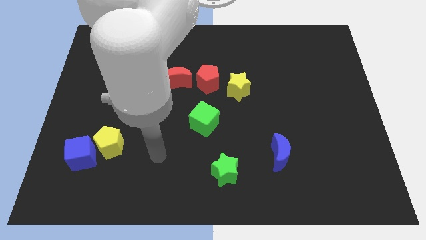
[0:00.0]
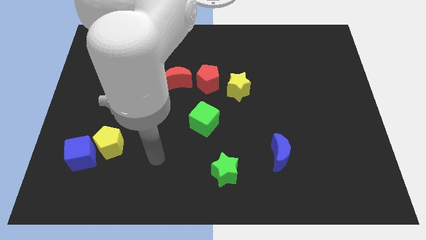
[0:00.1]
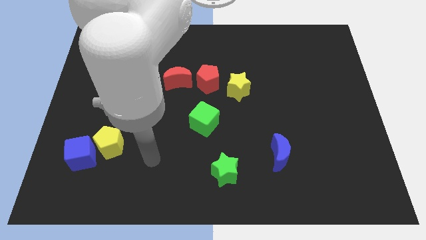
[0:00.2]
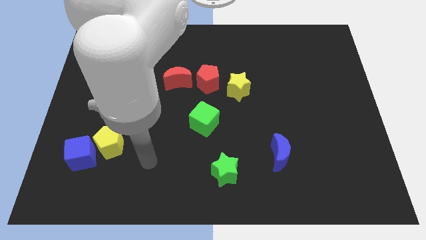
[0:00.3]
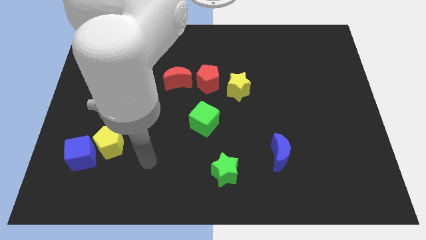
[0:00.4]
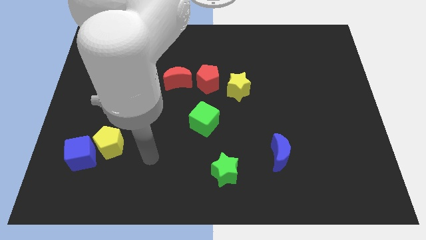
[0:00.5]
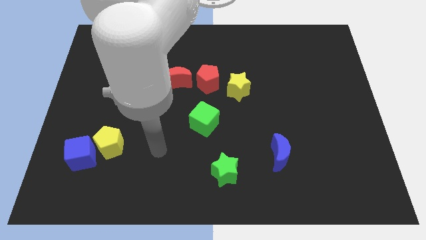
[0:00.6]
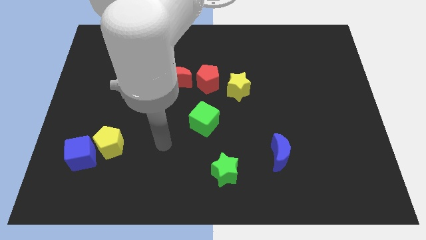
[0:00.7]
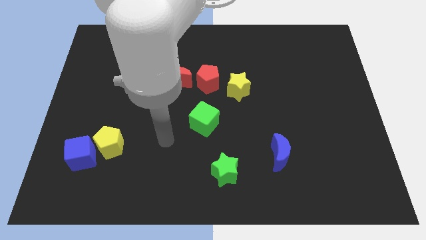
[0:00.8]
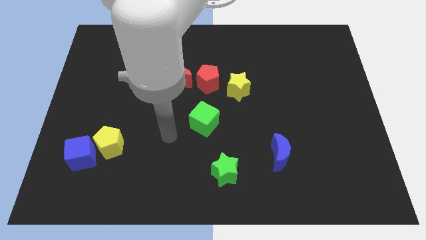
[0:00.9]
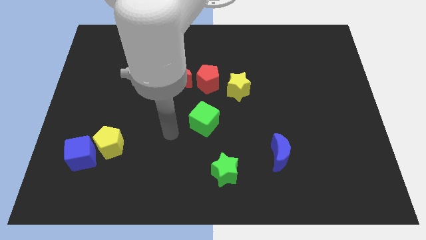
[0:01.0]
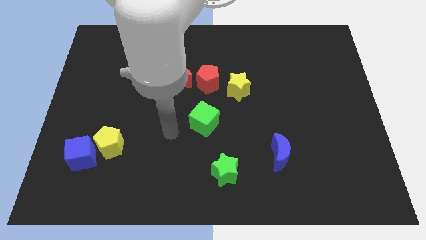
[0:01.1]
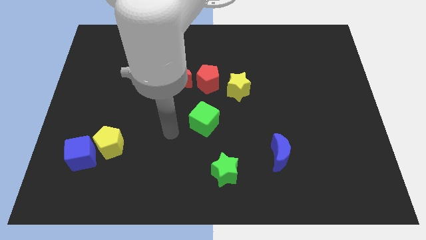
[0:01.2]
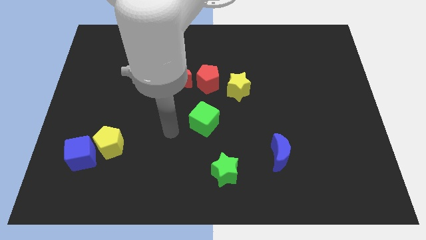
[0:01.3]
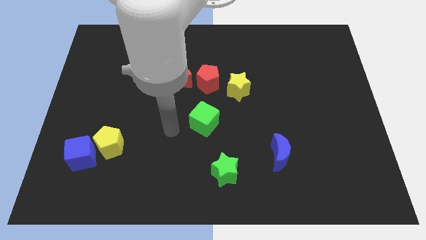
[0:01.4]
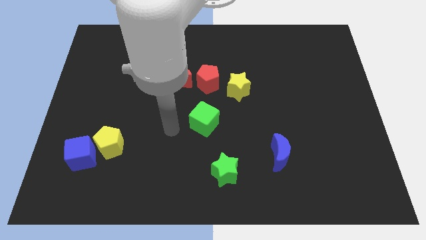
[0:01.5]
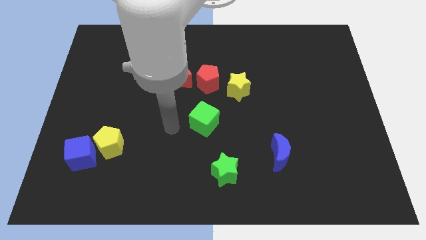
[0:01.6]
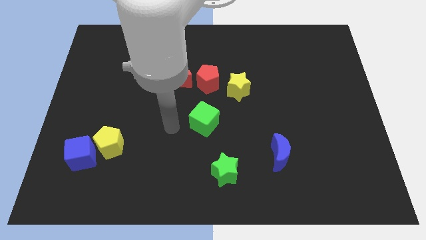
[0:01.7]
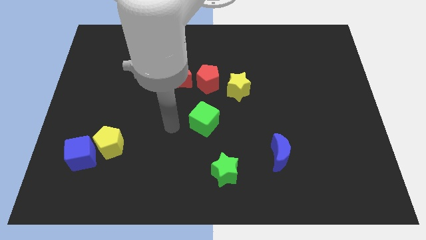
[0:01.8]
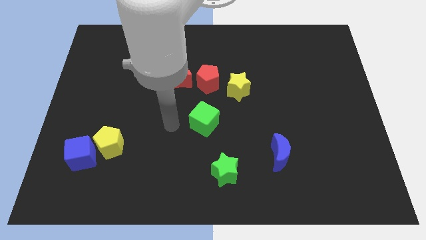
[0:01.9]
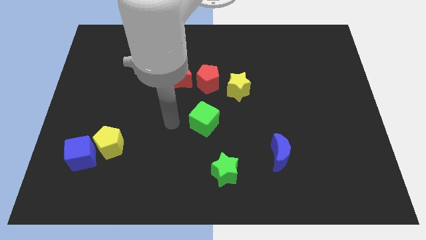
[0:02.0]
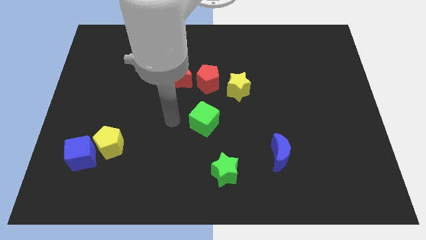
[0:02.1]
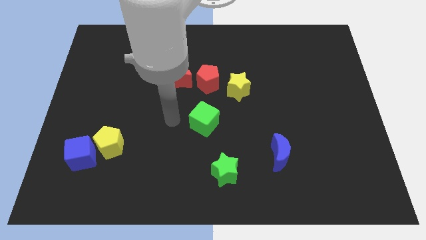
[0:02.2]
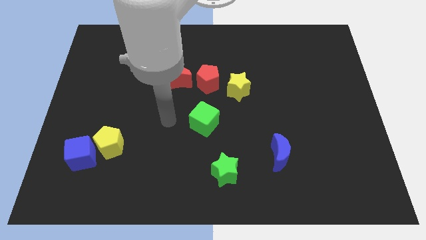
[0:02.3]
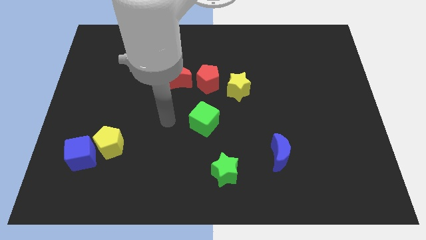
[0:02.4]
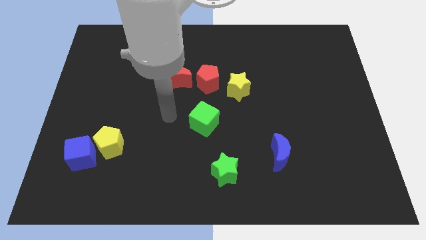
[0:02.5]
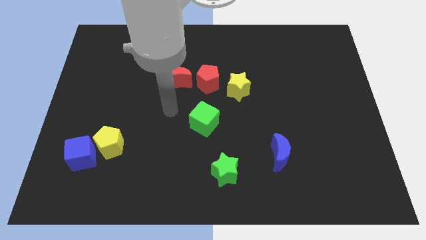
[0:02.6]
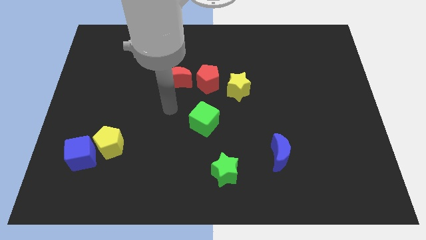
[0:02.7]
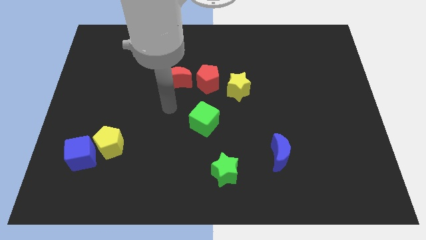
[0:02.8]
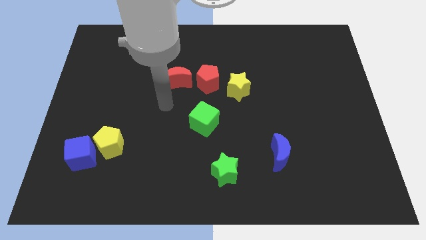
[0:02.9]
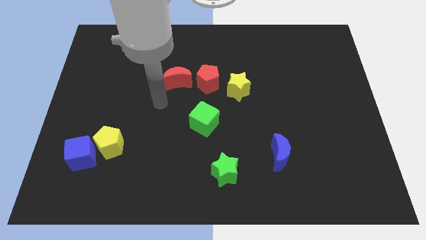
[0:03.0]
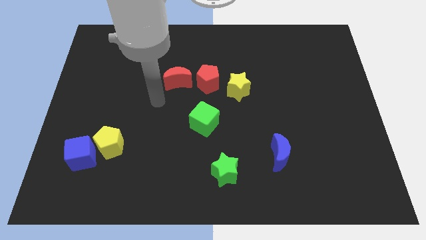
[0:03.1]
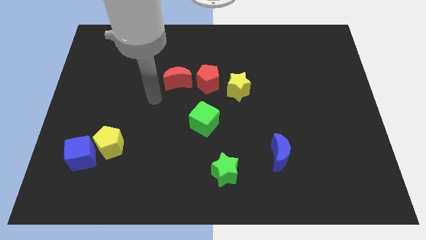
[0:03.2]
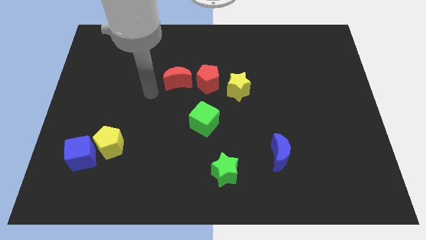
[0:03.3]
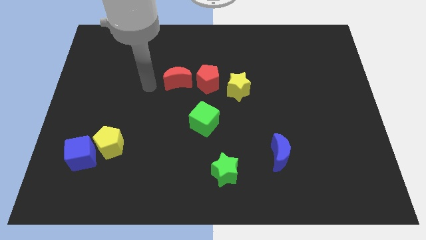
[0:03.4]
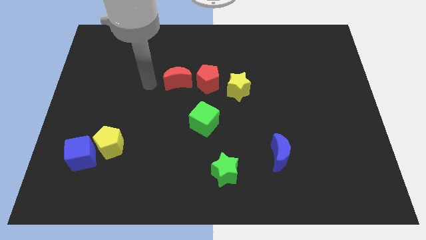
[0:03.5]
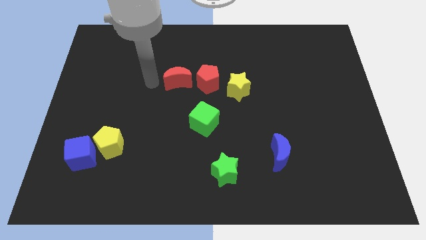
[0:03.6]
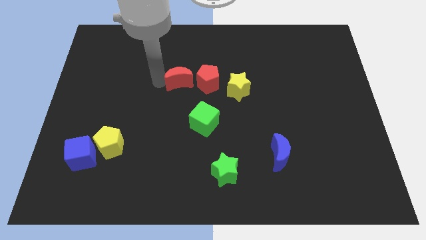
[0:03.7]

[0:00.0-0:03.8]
place your arm to the left side of the red crescent

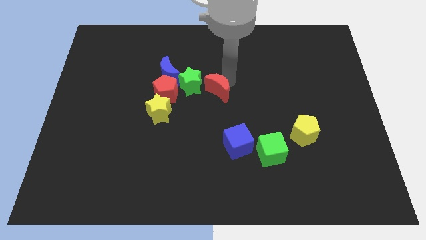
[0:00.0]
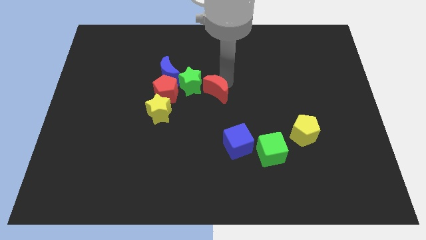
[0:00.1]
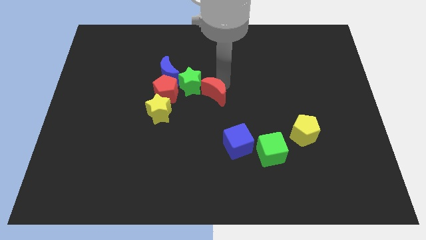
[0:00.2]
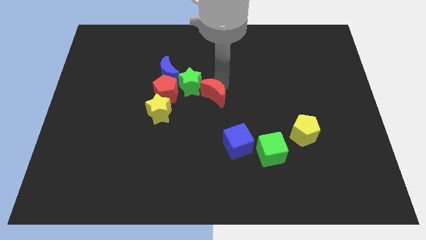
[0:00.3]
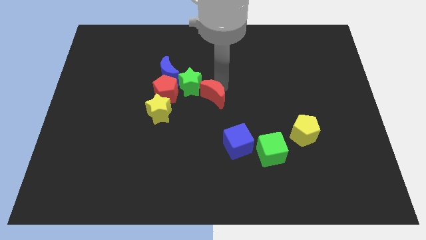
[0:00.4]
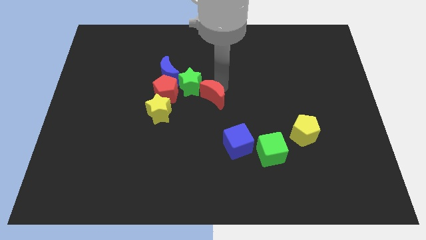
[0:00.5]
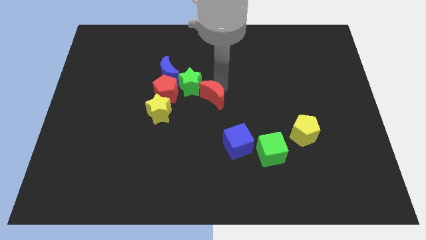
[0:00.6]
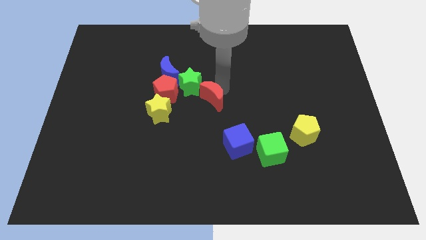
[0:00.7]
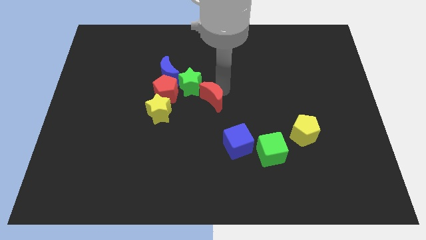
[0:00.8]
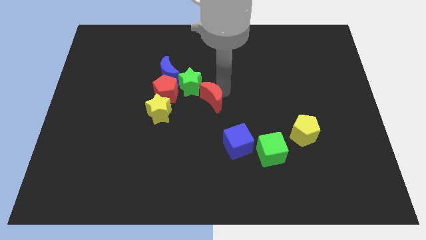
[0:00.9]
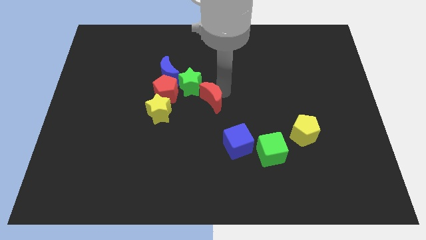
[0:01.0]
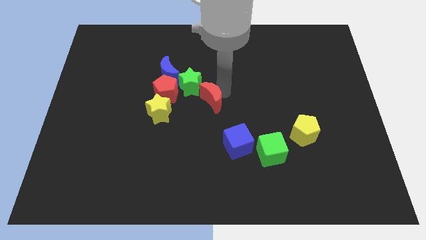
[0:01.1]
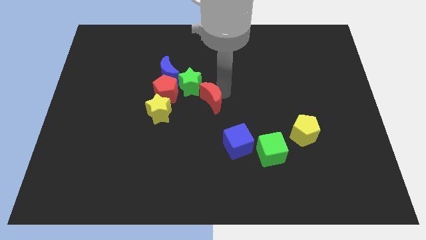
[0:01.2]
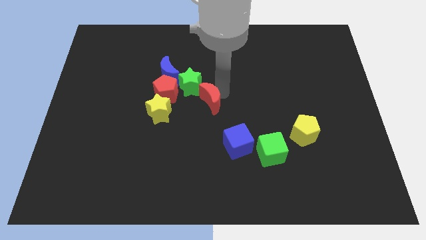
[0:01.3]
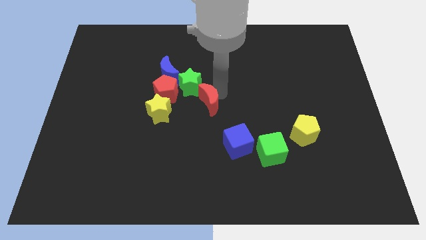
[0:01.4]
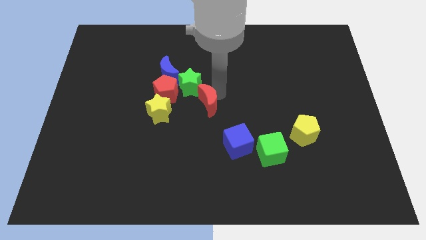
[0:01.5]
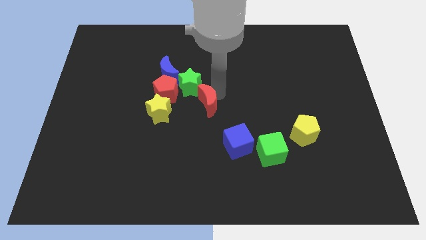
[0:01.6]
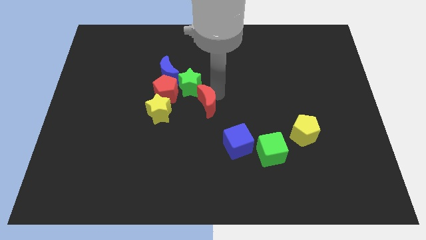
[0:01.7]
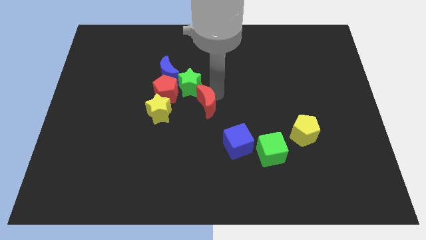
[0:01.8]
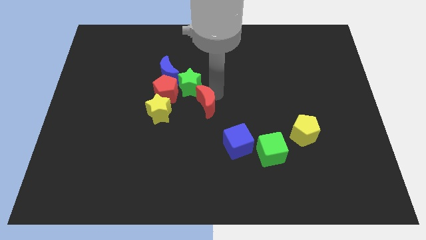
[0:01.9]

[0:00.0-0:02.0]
place the red crescent to the bottom right of the green star

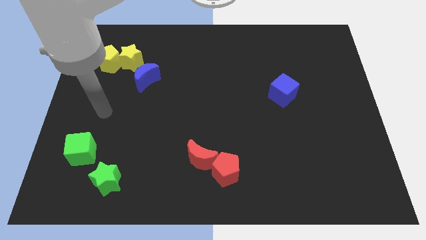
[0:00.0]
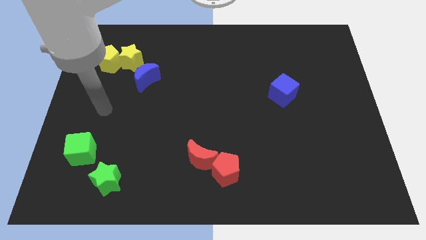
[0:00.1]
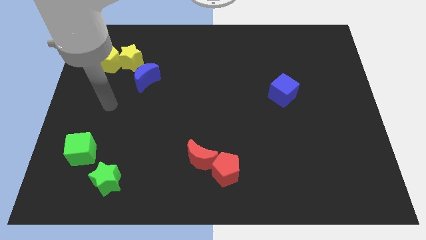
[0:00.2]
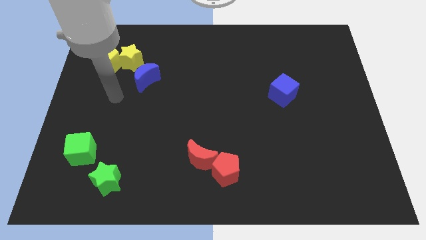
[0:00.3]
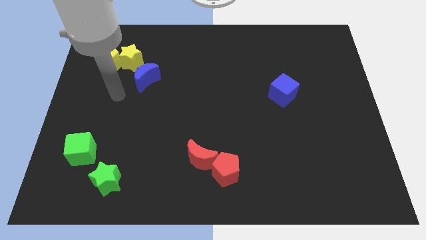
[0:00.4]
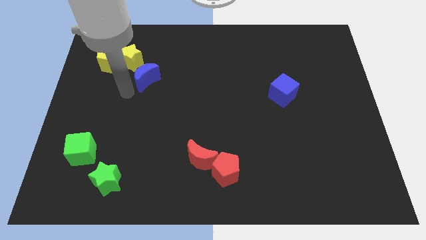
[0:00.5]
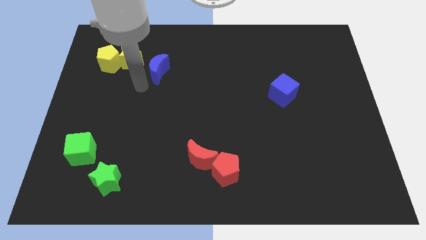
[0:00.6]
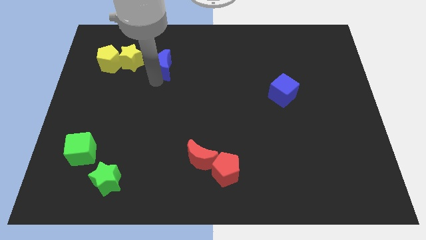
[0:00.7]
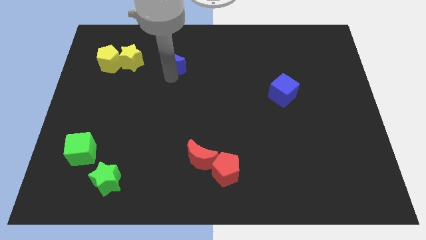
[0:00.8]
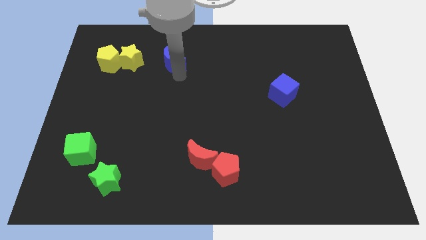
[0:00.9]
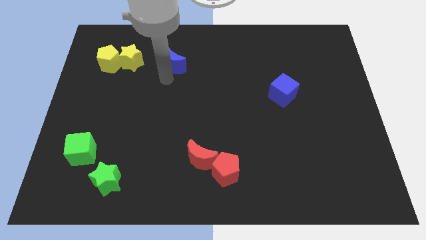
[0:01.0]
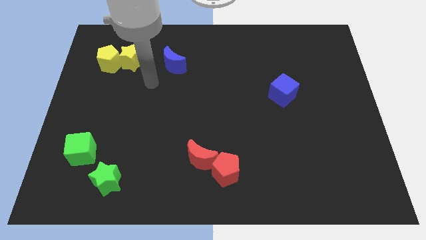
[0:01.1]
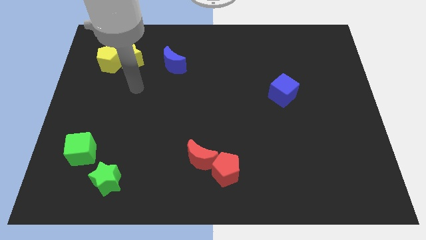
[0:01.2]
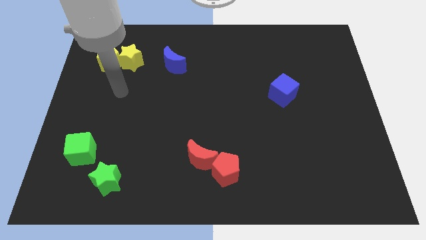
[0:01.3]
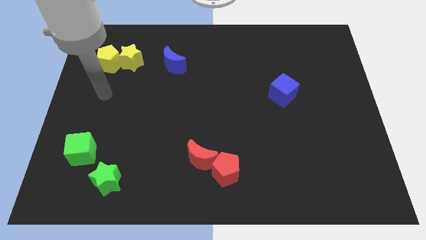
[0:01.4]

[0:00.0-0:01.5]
move the blue moon right to the yellow star
